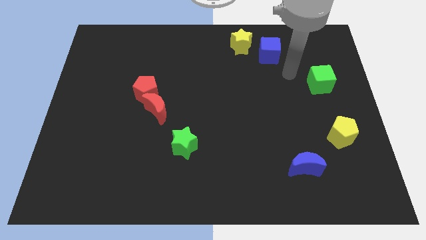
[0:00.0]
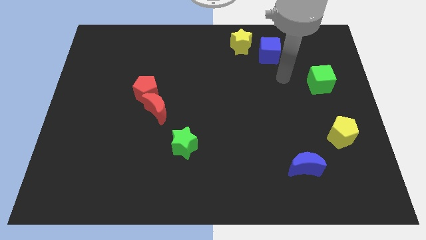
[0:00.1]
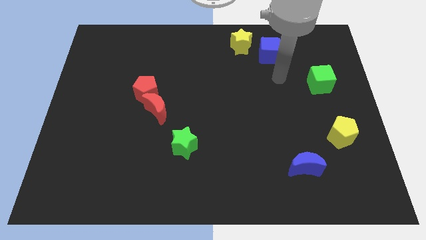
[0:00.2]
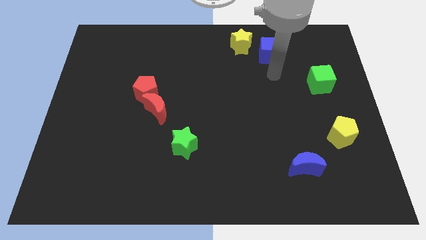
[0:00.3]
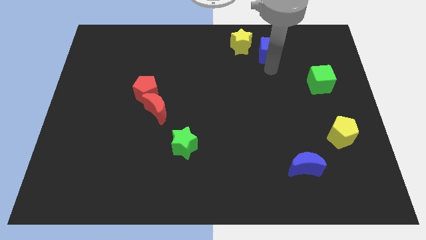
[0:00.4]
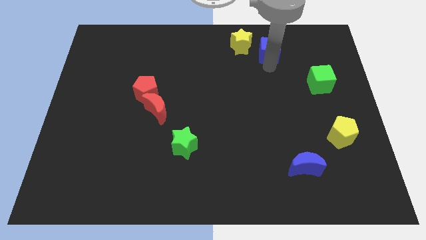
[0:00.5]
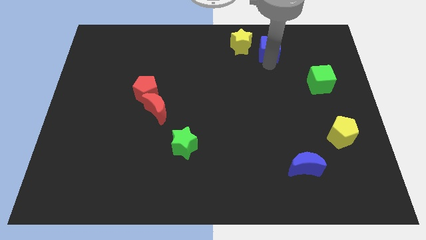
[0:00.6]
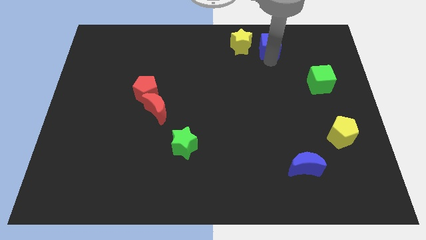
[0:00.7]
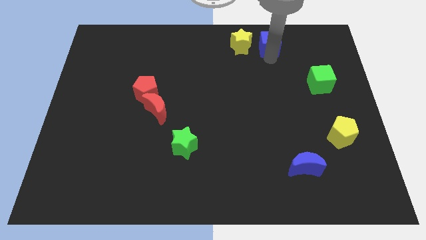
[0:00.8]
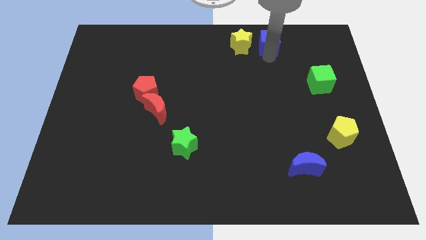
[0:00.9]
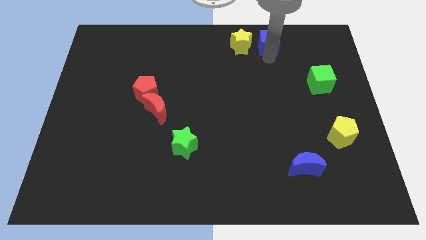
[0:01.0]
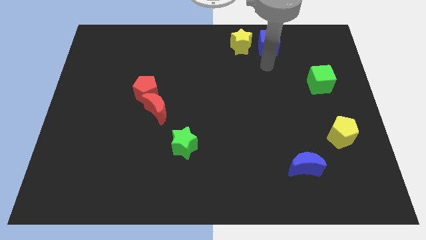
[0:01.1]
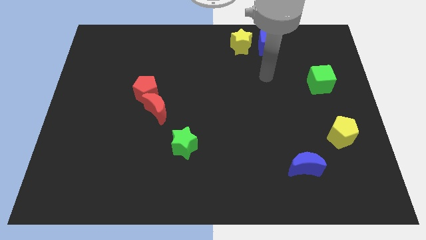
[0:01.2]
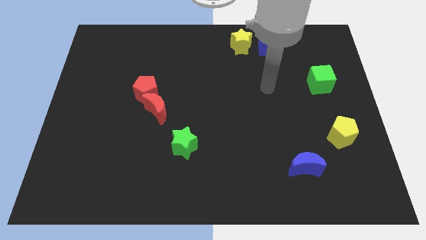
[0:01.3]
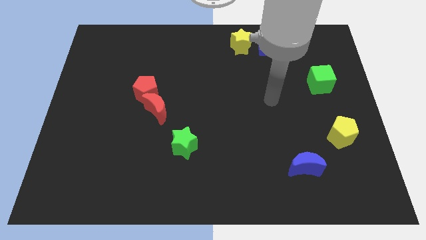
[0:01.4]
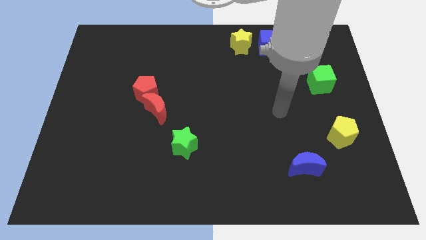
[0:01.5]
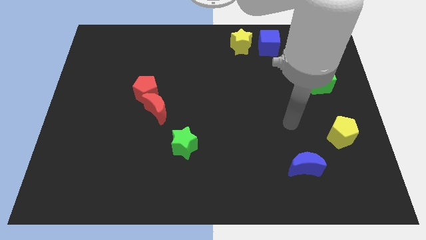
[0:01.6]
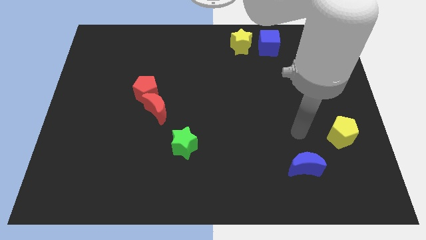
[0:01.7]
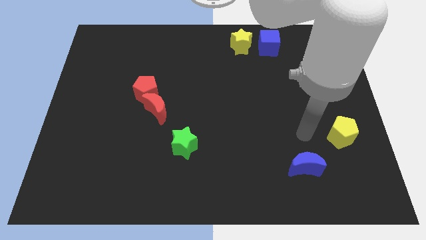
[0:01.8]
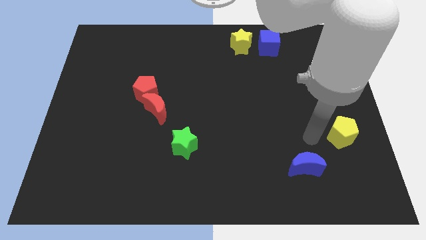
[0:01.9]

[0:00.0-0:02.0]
put the blue cube right to the yellow star

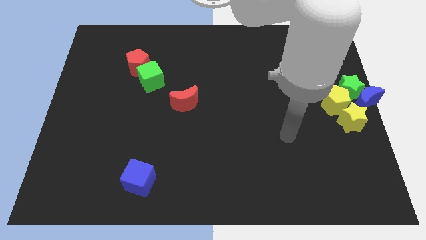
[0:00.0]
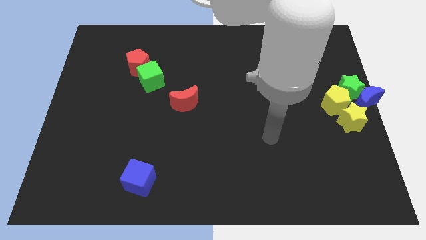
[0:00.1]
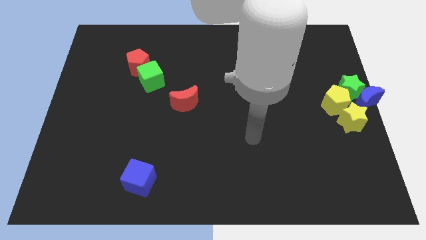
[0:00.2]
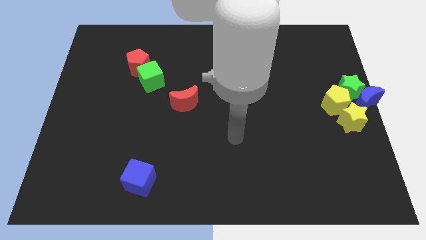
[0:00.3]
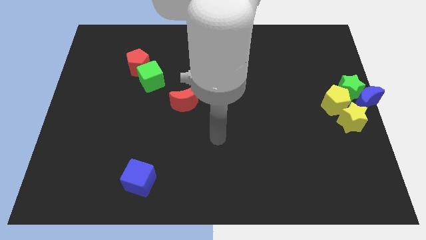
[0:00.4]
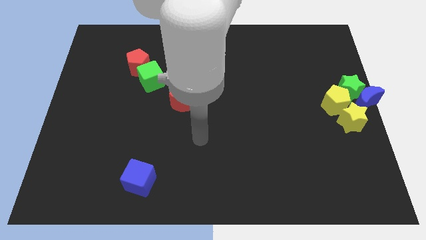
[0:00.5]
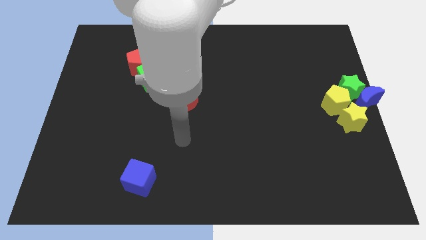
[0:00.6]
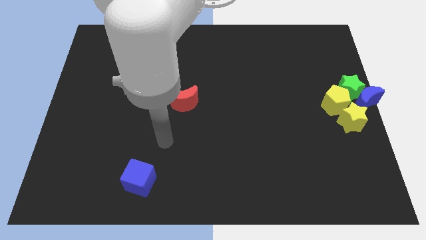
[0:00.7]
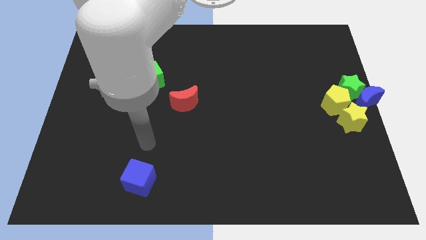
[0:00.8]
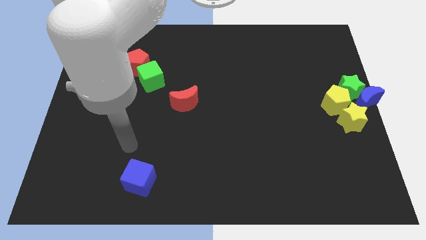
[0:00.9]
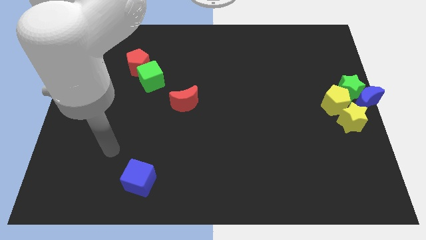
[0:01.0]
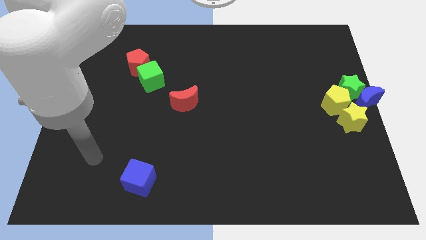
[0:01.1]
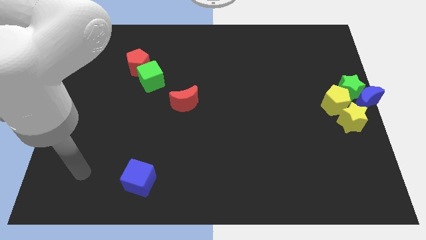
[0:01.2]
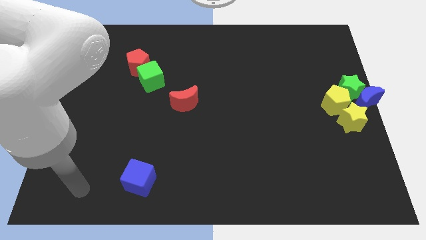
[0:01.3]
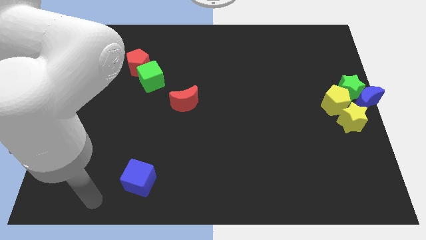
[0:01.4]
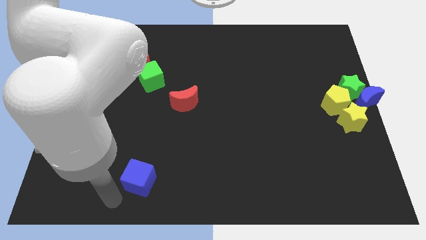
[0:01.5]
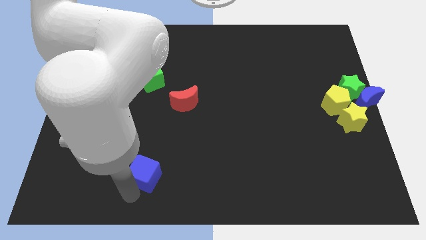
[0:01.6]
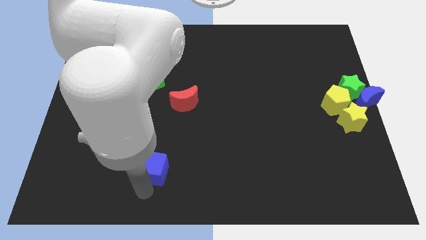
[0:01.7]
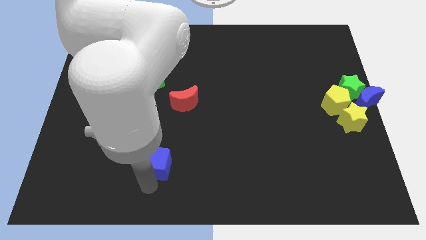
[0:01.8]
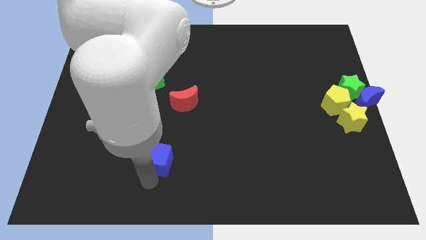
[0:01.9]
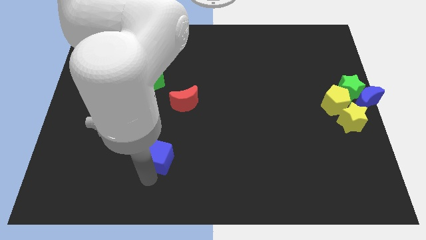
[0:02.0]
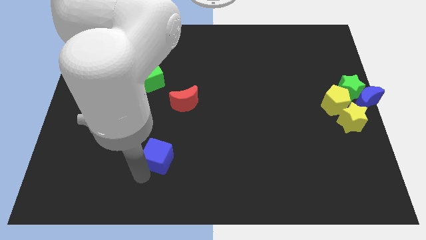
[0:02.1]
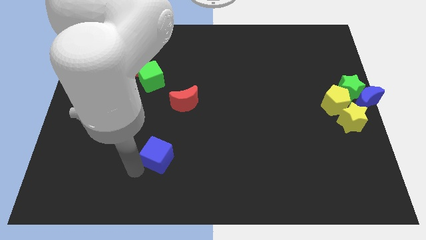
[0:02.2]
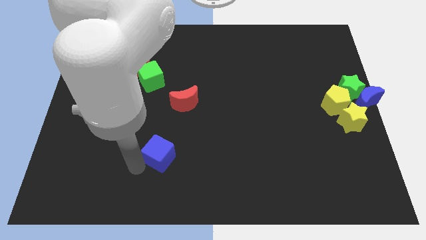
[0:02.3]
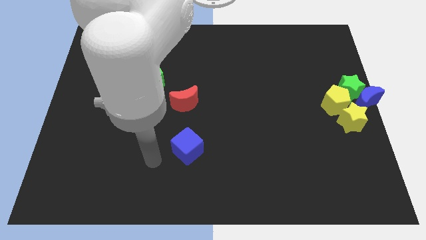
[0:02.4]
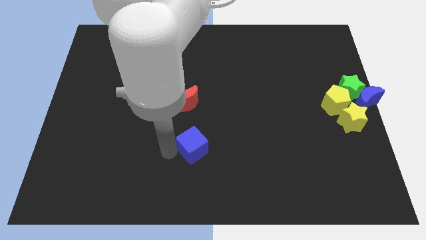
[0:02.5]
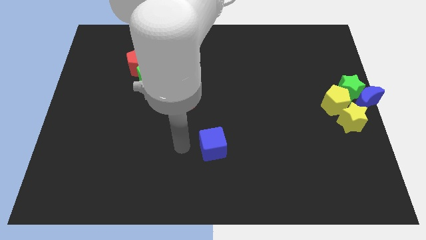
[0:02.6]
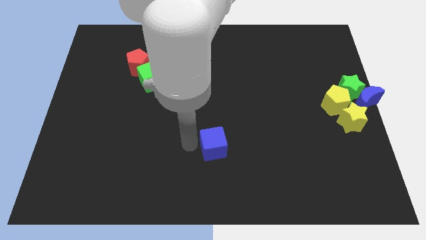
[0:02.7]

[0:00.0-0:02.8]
move the blue cube towards bottom center of the board

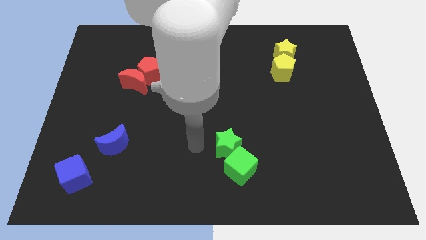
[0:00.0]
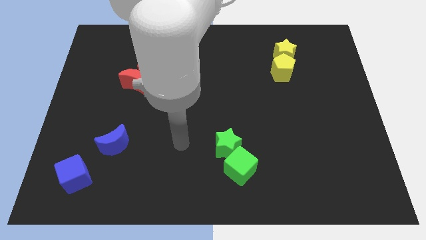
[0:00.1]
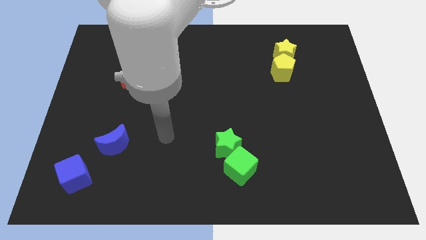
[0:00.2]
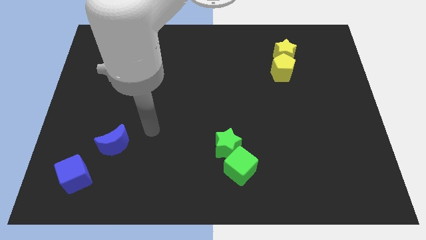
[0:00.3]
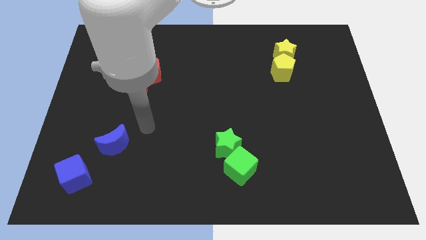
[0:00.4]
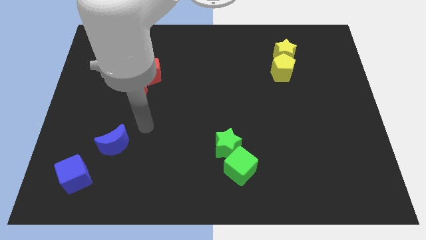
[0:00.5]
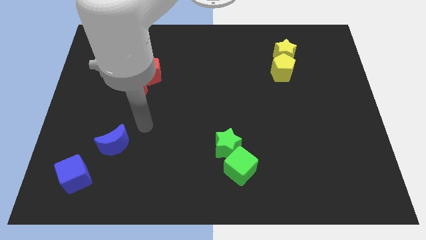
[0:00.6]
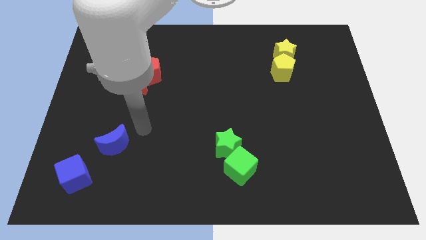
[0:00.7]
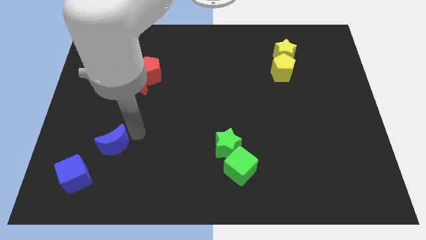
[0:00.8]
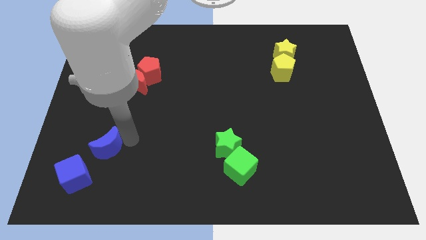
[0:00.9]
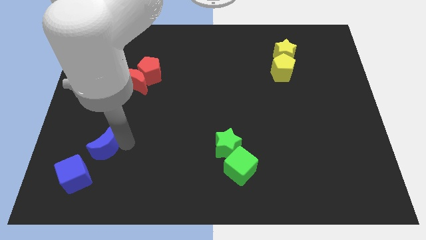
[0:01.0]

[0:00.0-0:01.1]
move the arm towards the blue crescent

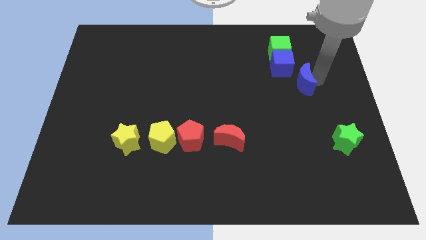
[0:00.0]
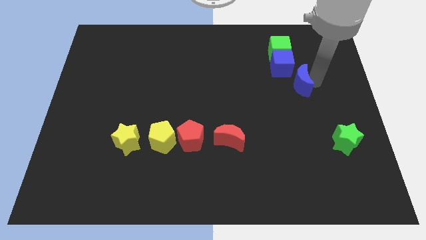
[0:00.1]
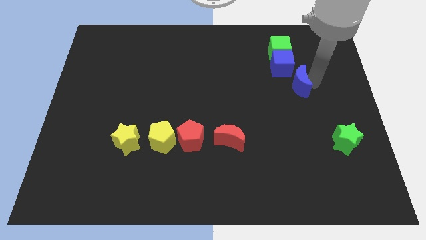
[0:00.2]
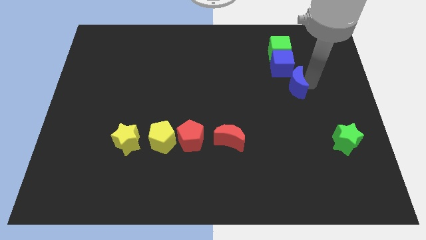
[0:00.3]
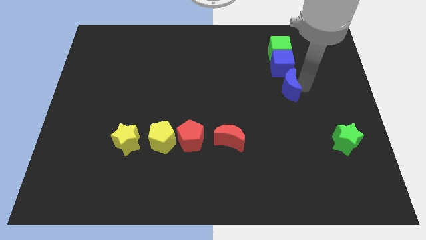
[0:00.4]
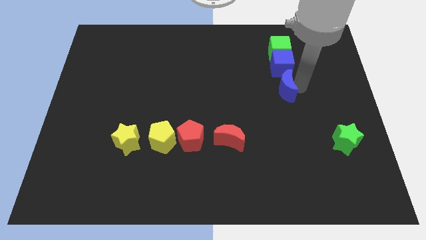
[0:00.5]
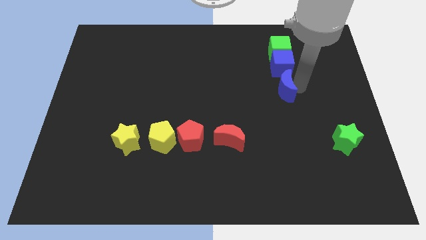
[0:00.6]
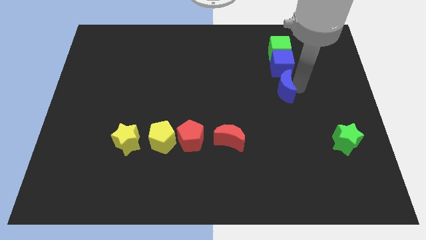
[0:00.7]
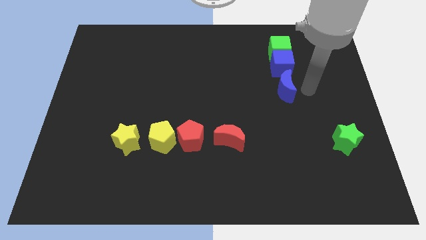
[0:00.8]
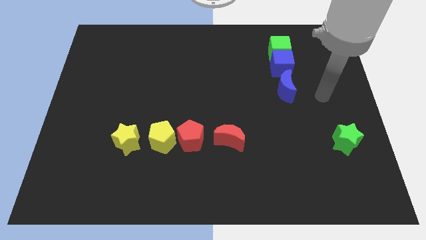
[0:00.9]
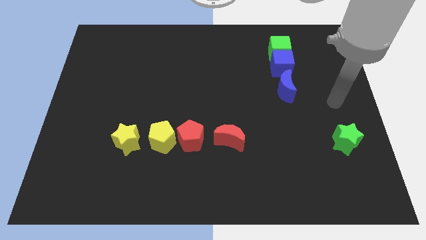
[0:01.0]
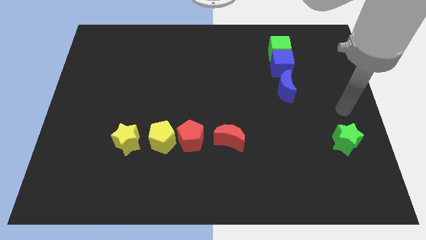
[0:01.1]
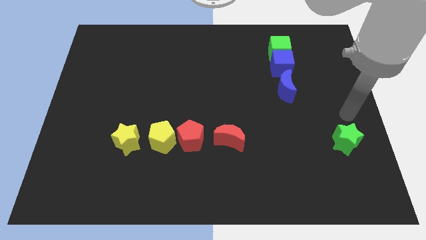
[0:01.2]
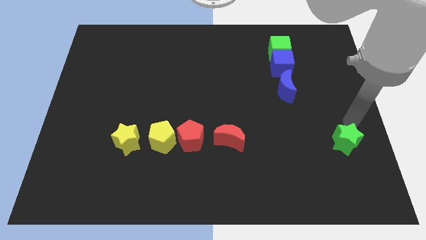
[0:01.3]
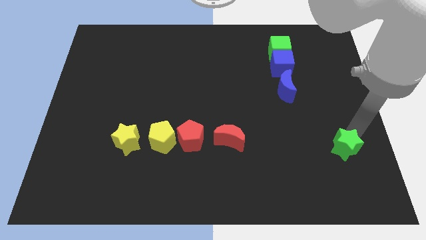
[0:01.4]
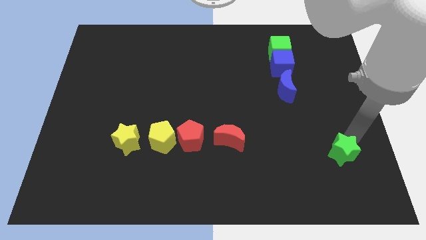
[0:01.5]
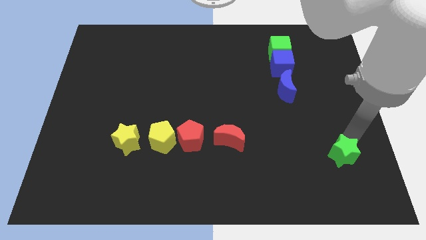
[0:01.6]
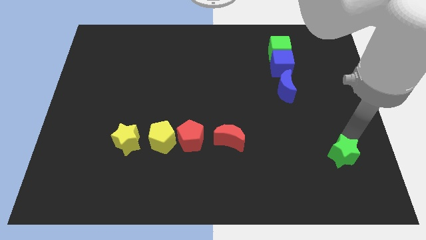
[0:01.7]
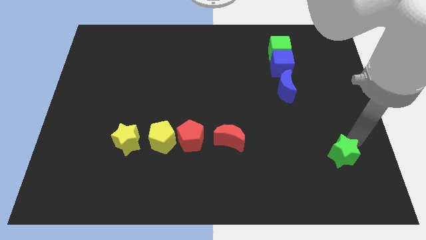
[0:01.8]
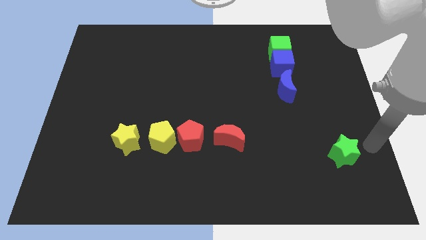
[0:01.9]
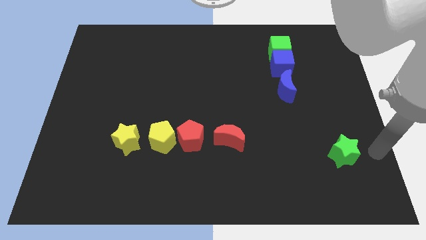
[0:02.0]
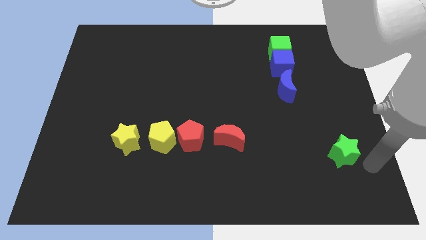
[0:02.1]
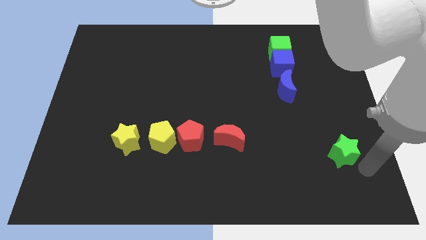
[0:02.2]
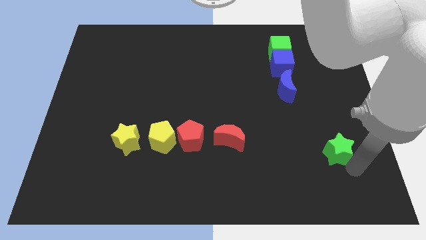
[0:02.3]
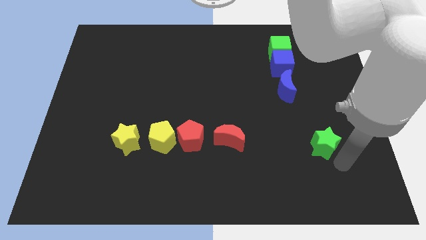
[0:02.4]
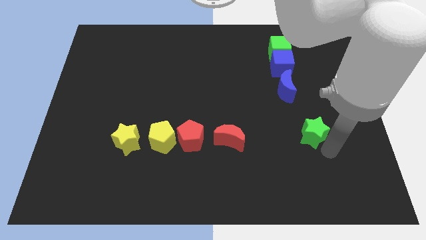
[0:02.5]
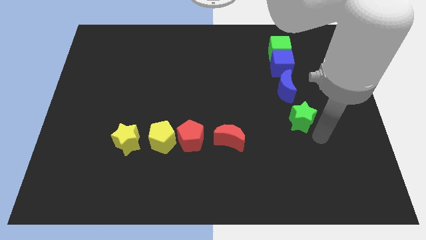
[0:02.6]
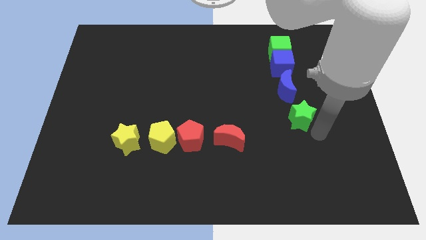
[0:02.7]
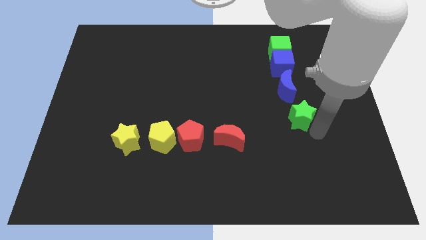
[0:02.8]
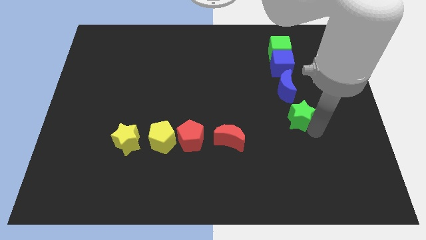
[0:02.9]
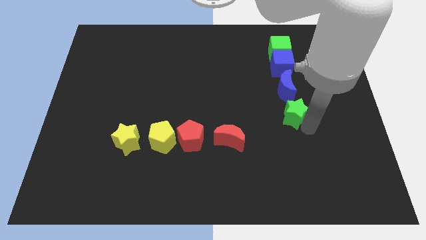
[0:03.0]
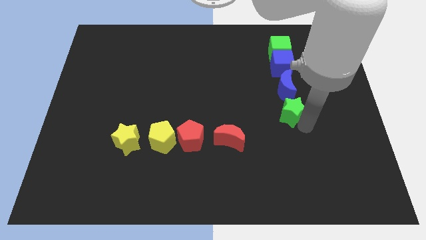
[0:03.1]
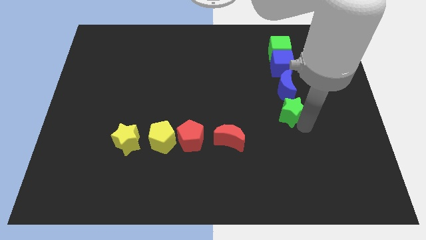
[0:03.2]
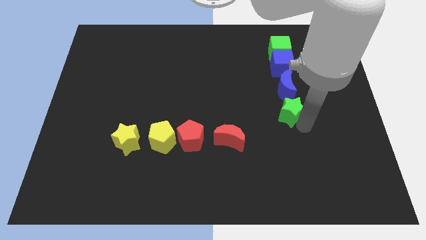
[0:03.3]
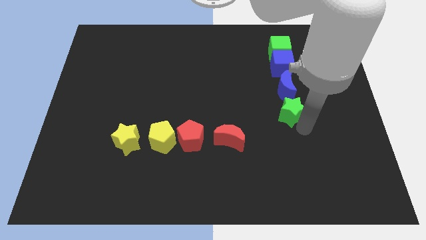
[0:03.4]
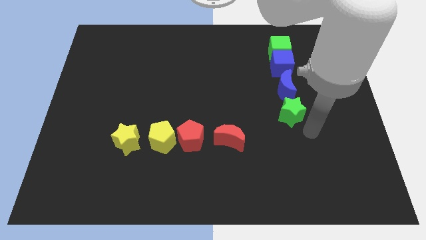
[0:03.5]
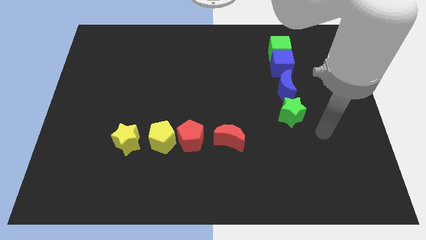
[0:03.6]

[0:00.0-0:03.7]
move the green star towards the bottom of the blue moon
